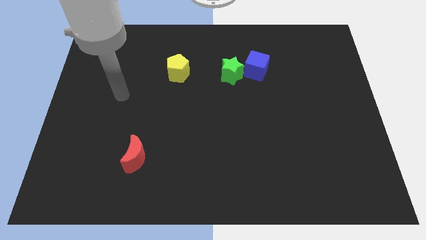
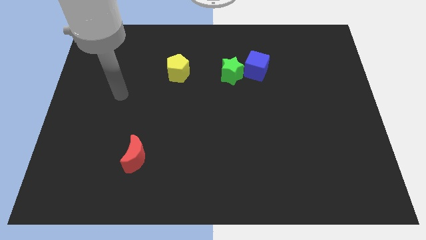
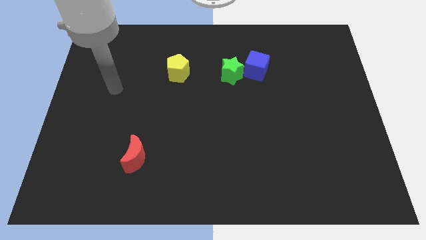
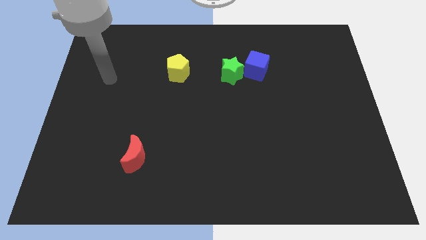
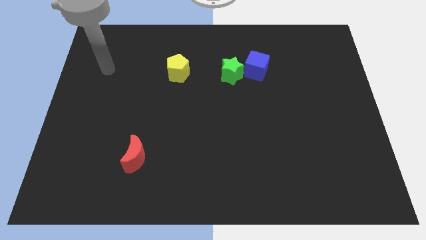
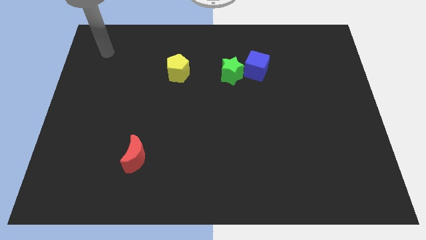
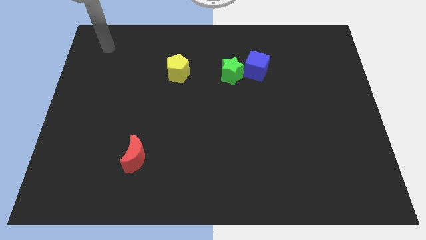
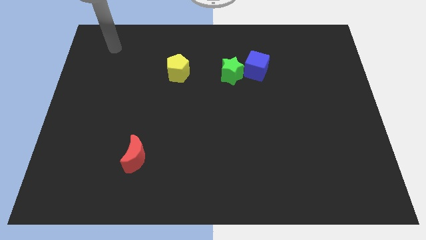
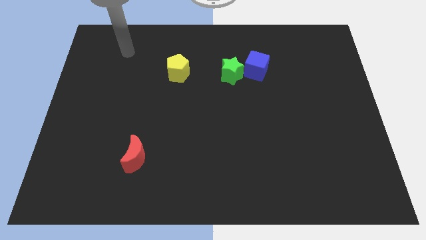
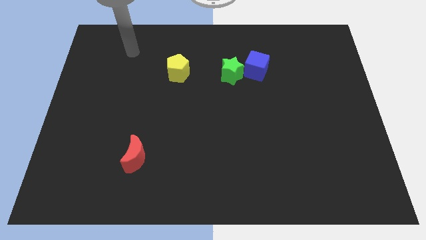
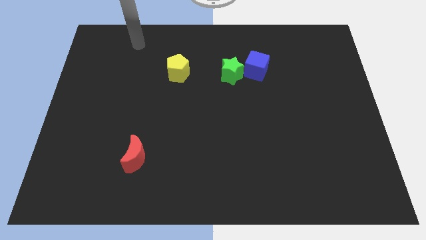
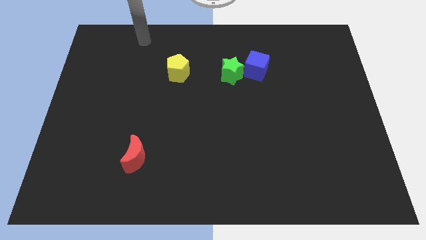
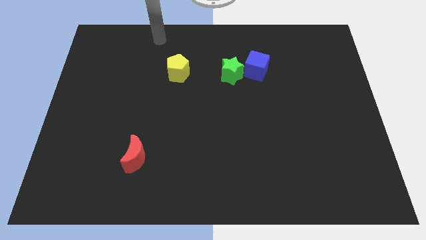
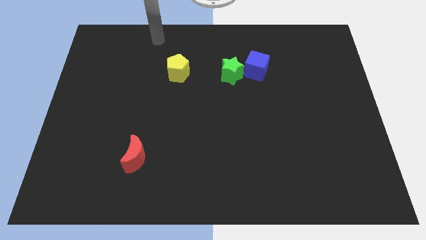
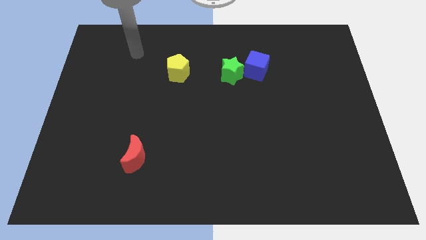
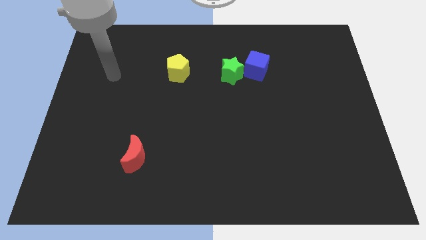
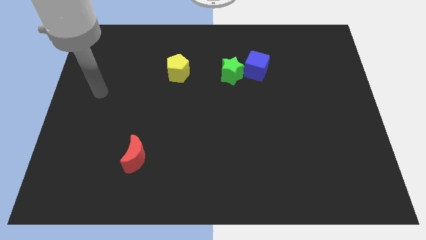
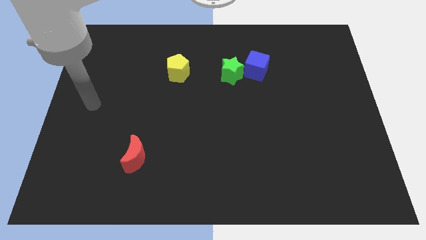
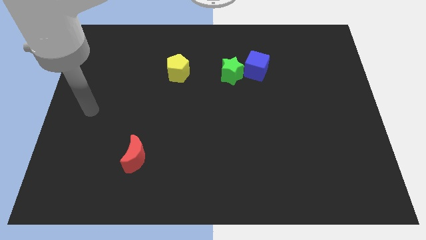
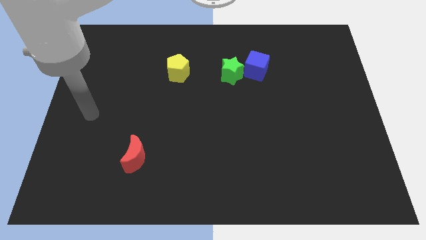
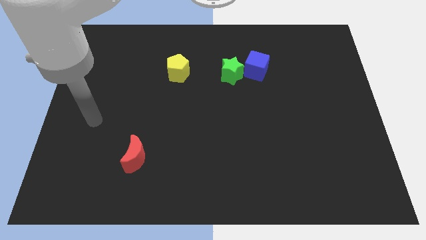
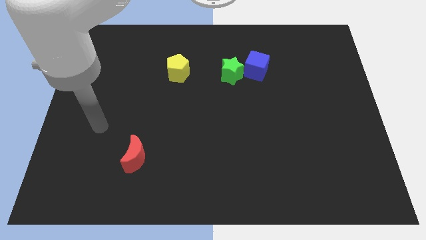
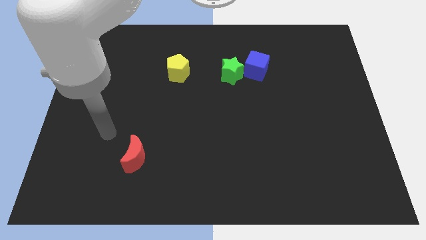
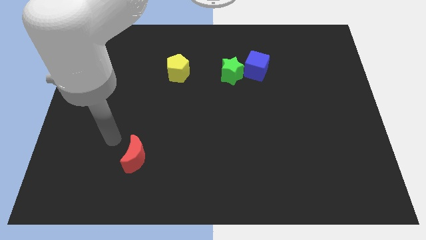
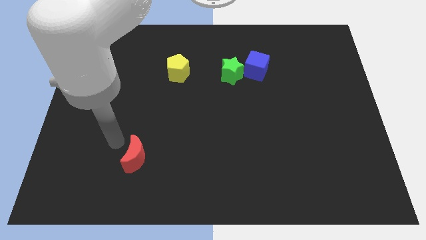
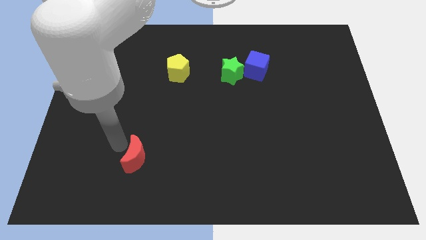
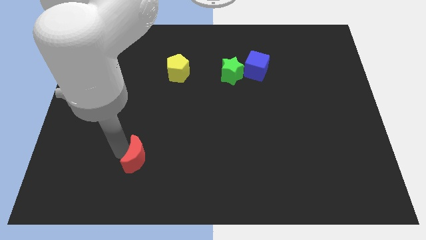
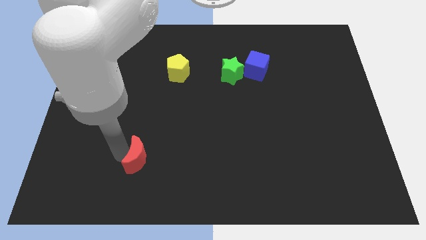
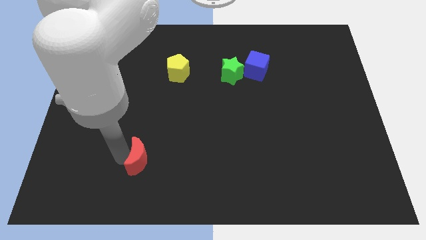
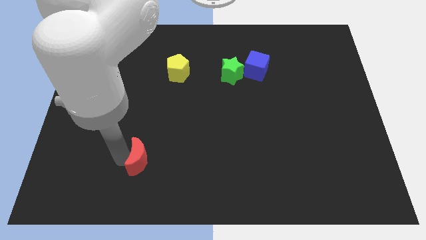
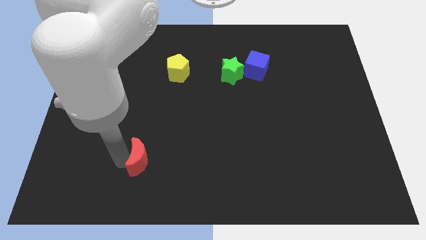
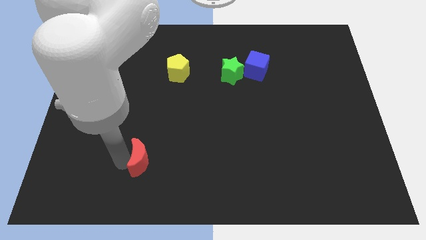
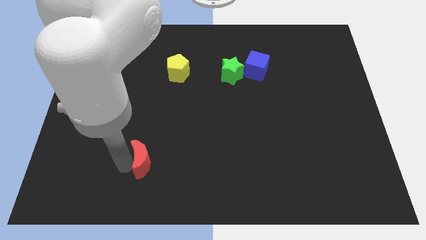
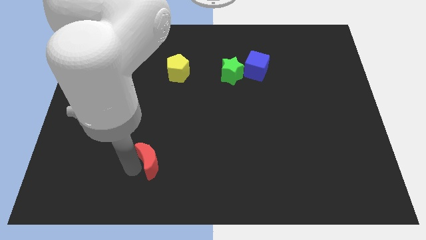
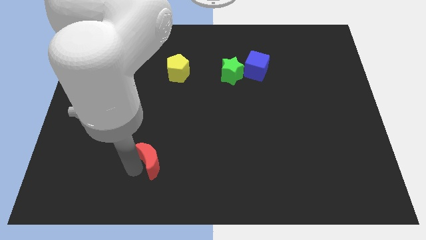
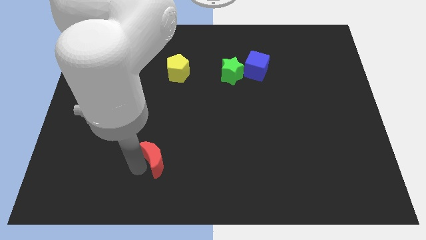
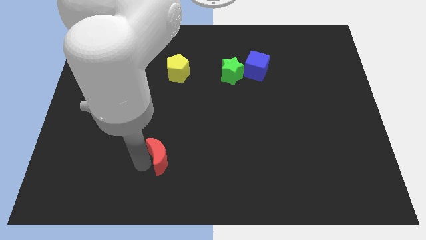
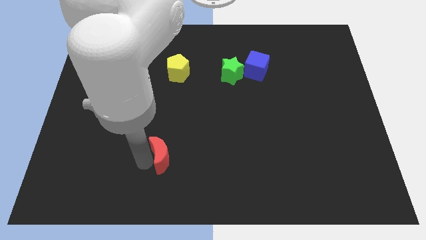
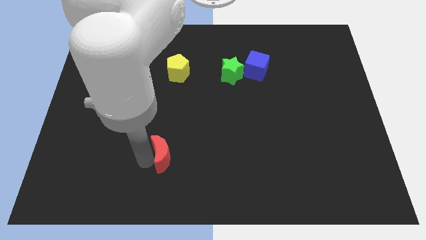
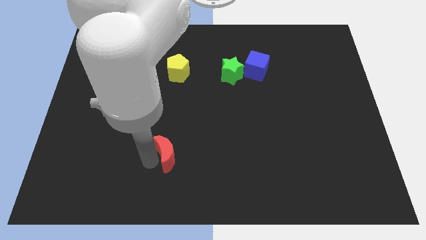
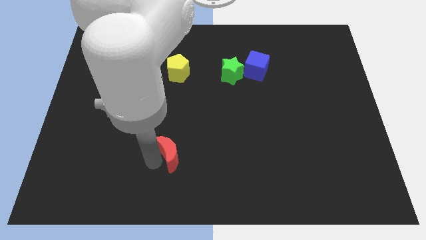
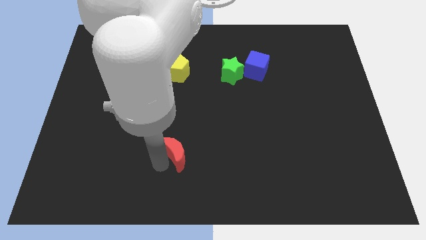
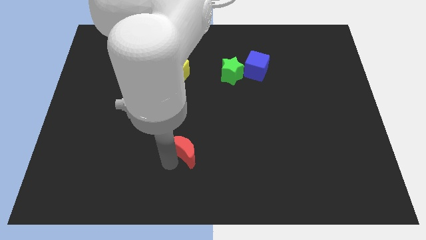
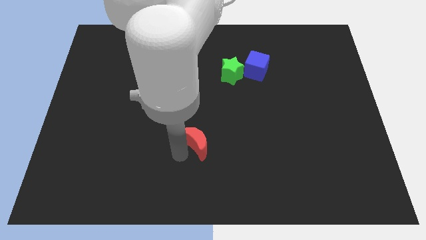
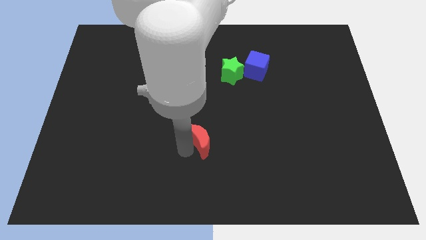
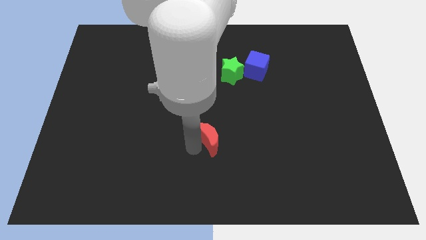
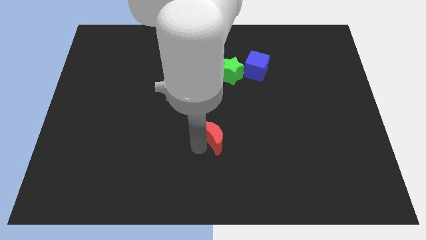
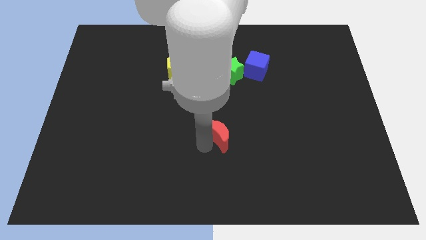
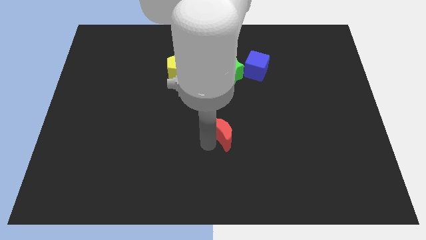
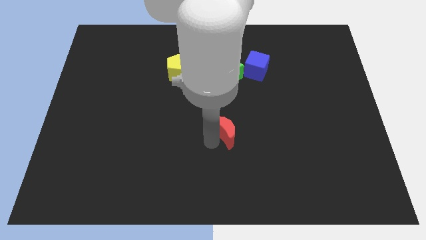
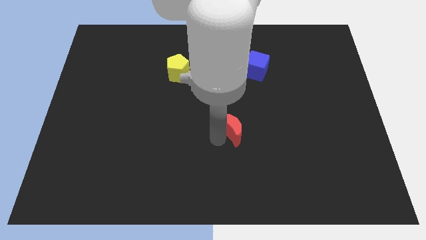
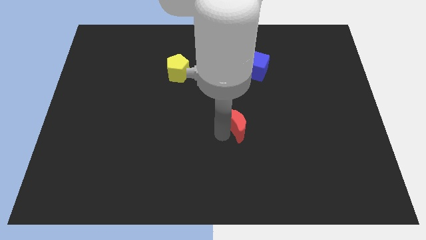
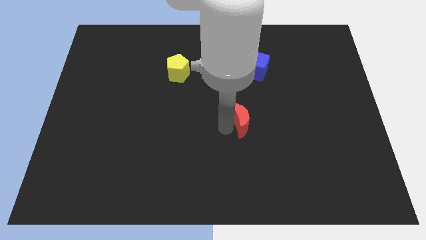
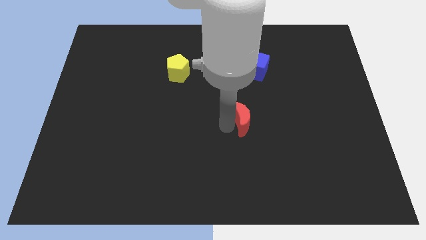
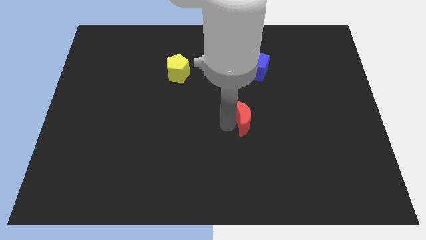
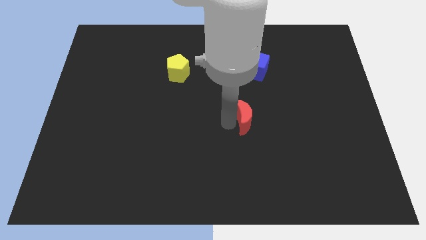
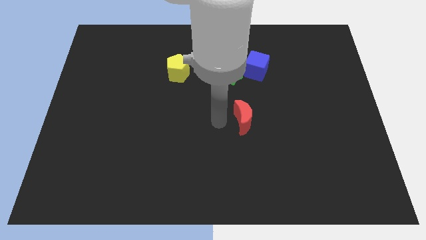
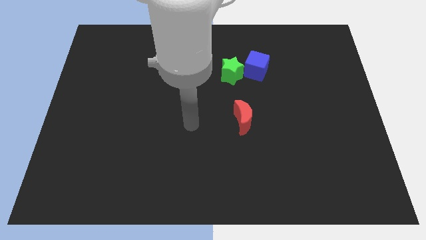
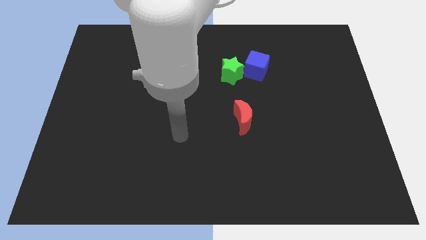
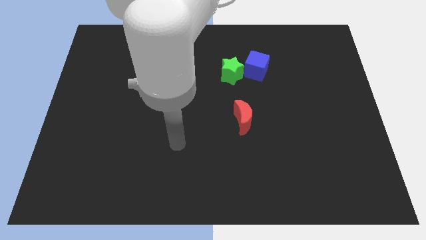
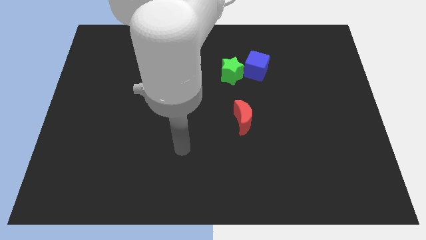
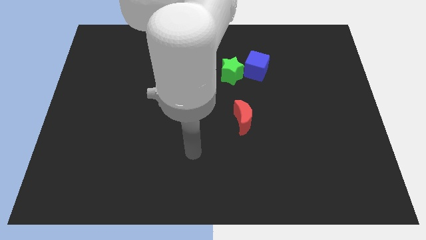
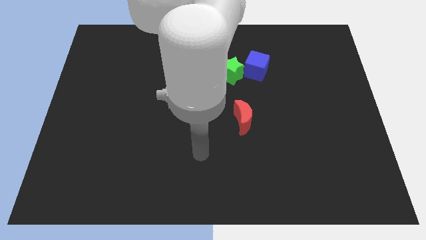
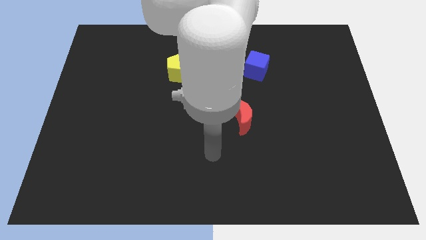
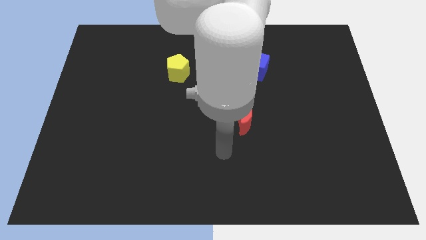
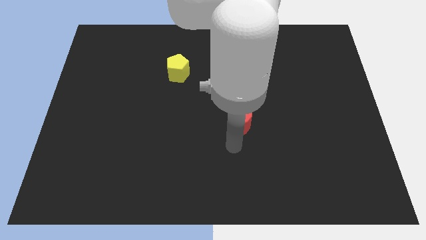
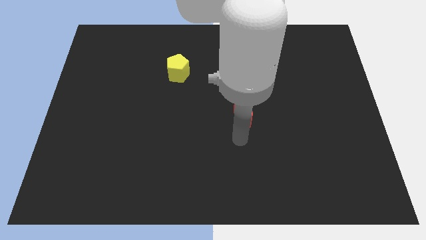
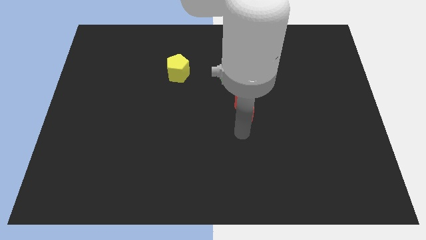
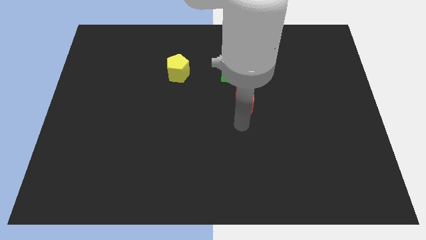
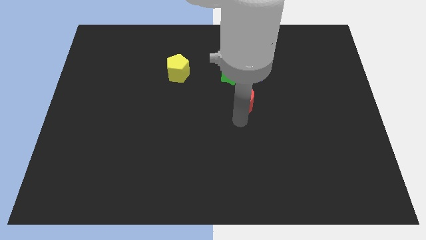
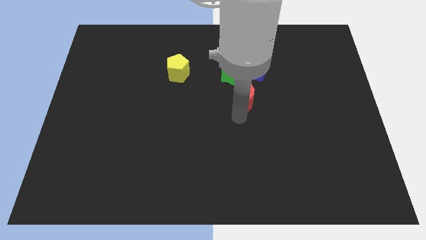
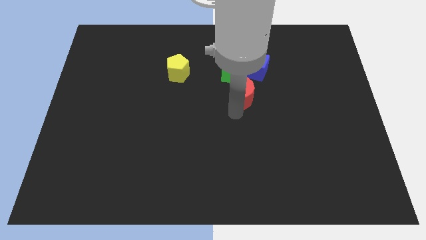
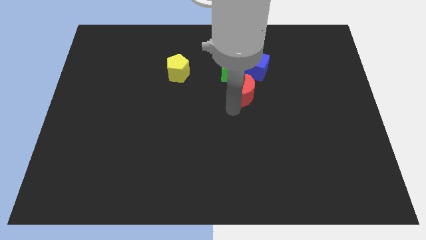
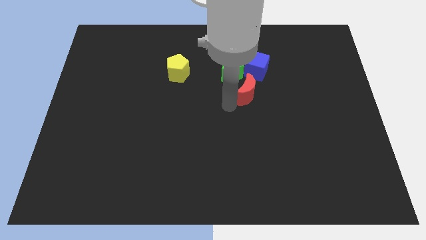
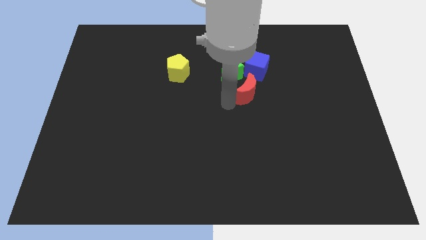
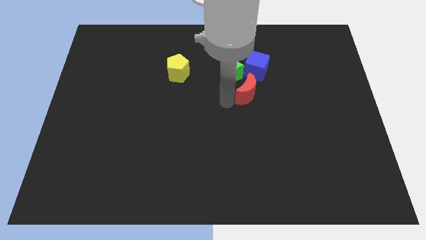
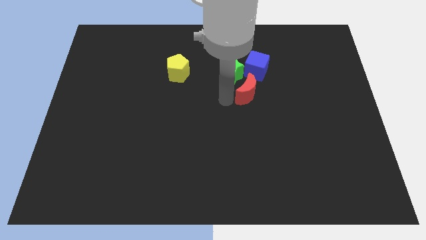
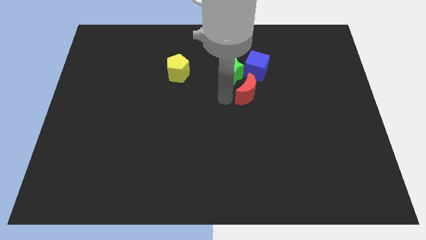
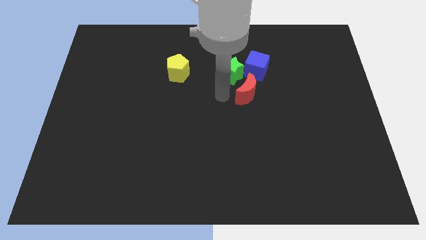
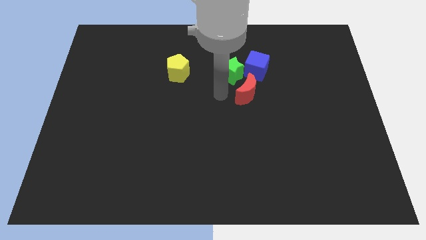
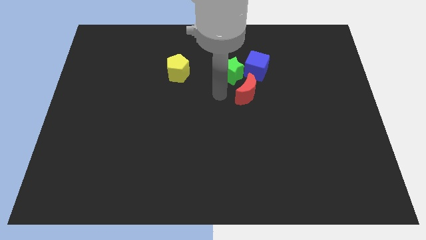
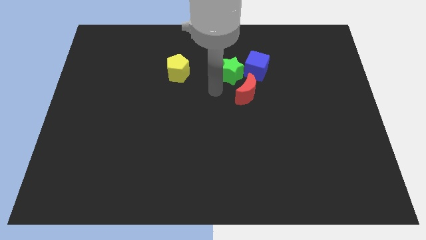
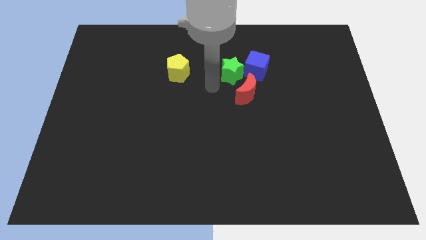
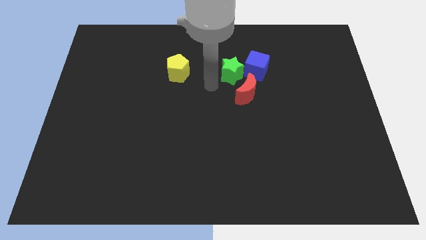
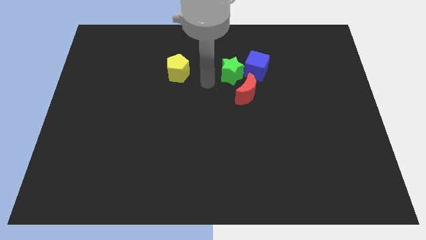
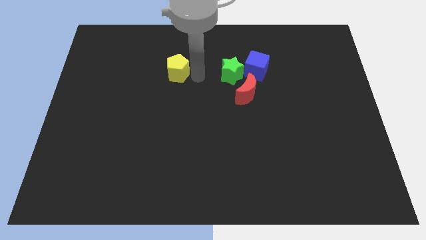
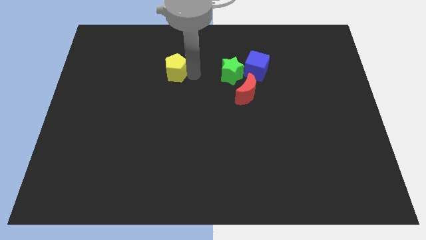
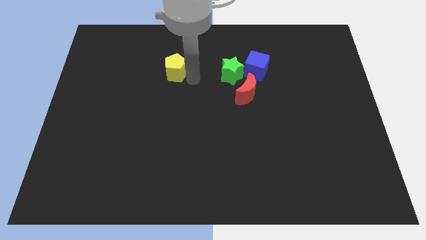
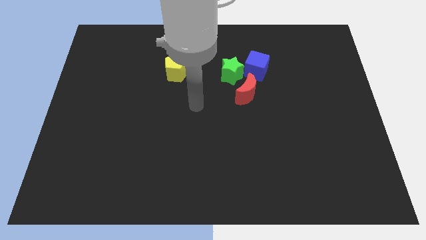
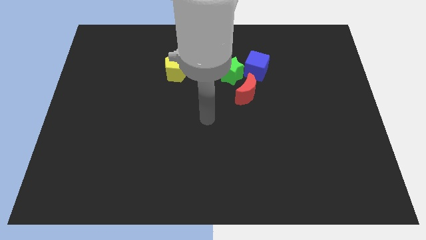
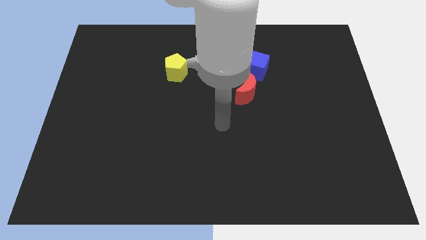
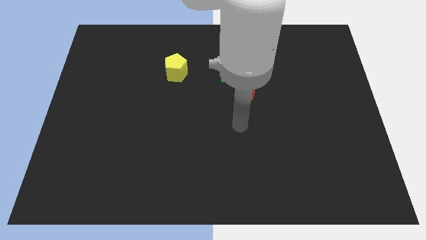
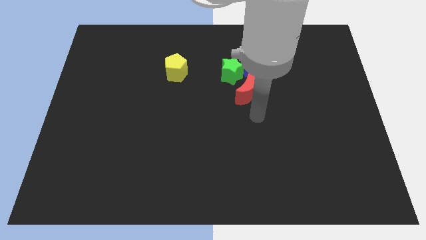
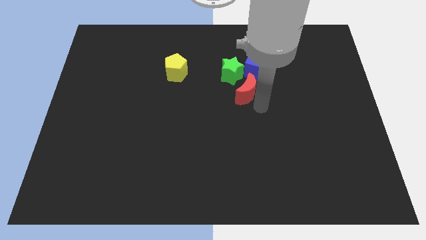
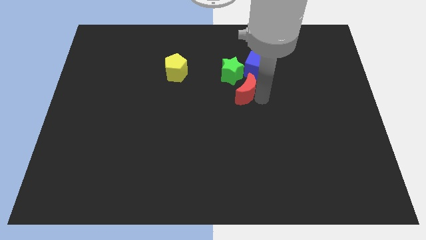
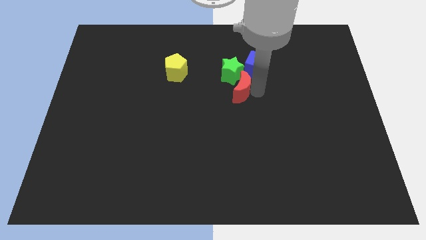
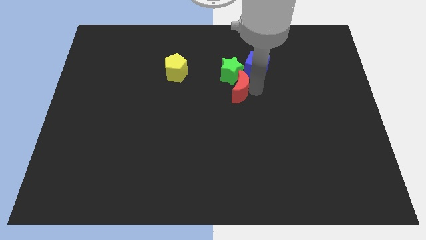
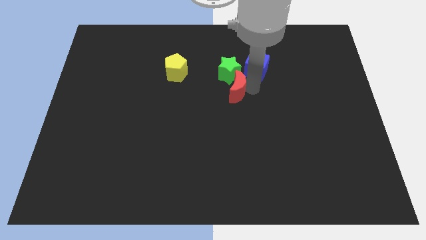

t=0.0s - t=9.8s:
push the red moon to the green star
